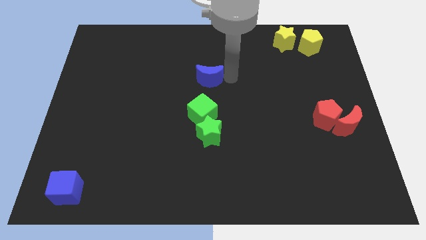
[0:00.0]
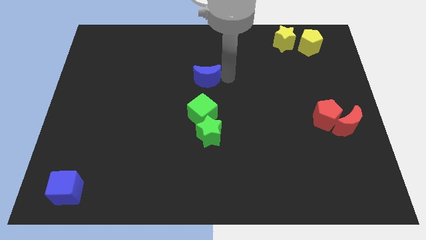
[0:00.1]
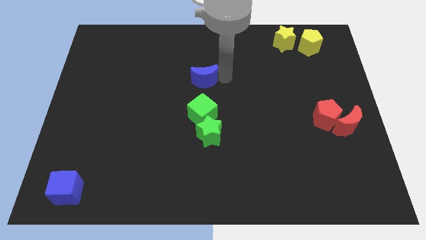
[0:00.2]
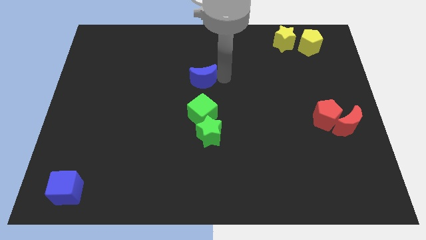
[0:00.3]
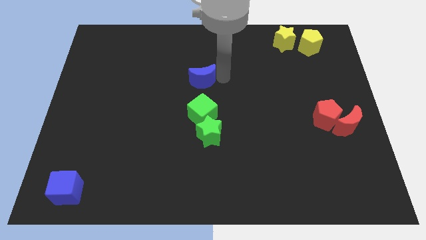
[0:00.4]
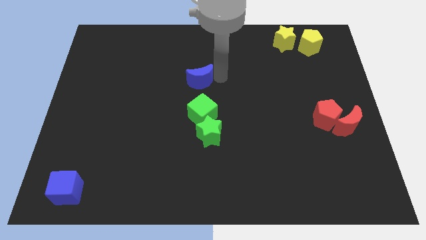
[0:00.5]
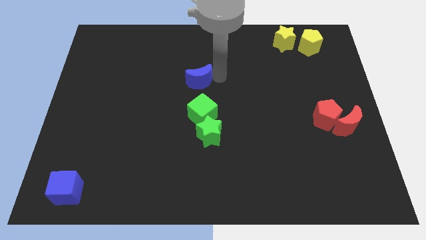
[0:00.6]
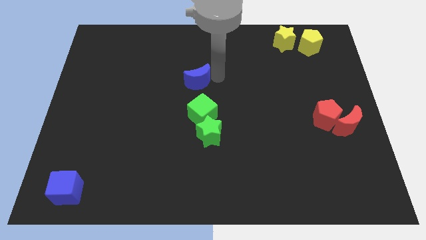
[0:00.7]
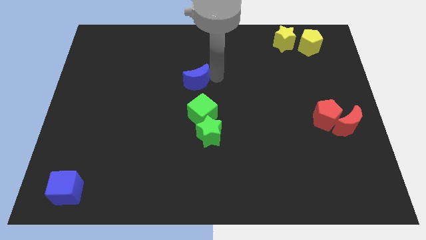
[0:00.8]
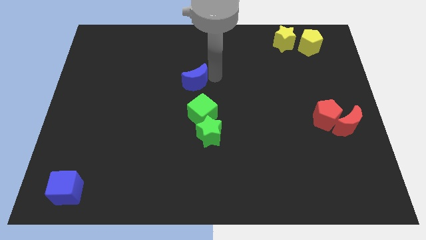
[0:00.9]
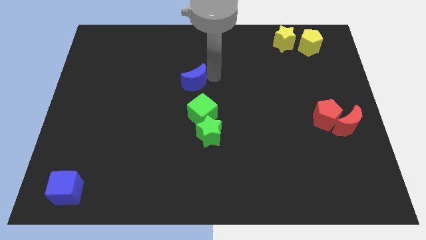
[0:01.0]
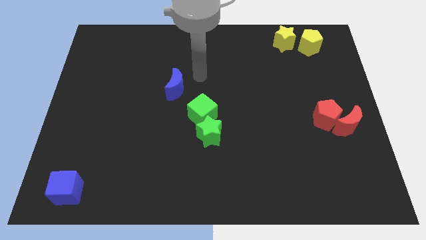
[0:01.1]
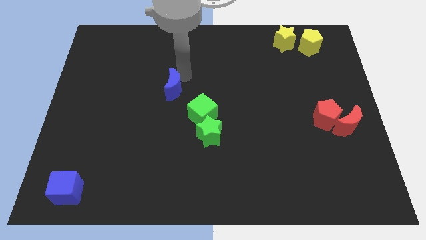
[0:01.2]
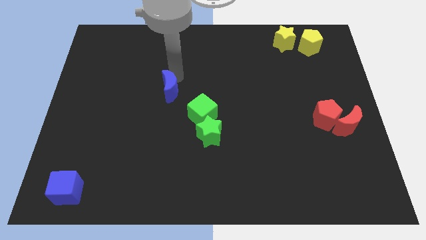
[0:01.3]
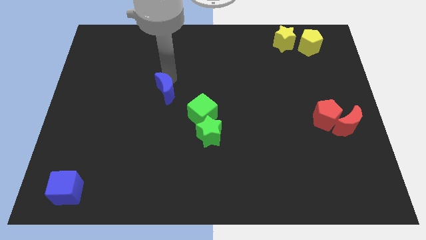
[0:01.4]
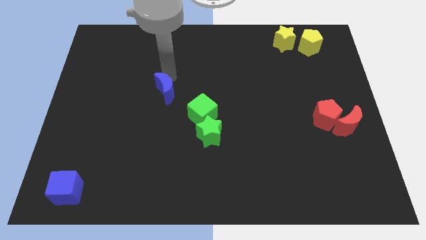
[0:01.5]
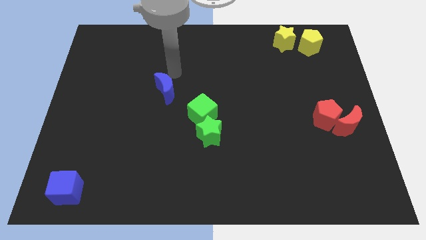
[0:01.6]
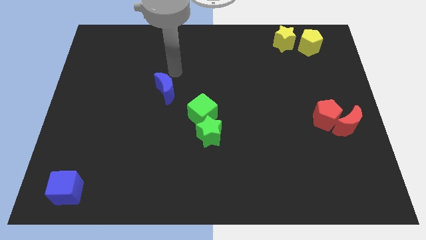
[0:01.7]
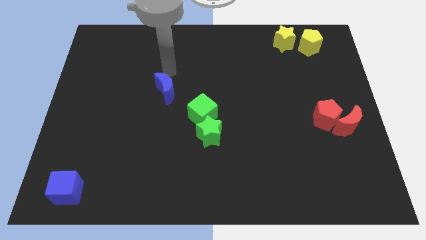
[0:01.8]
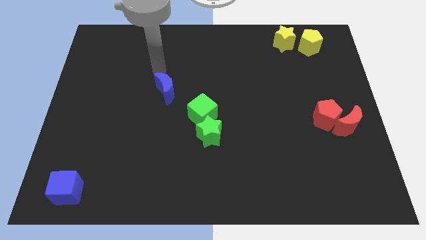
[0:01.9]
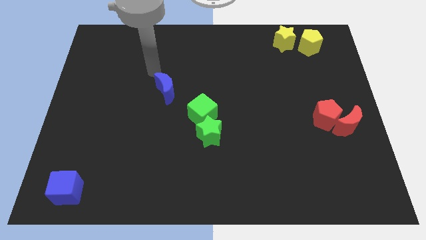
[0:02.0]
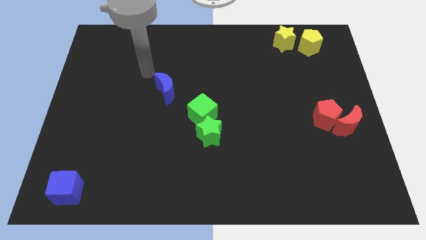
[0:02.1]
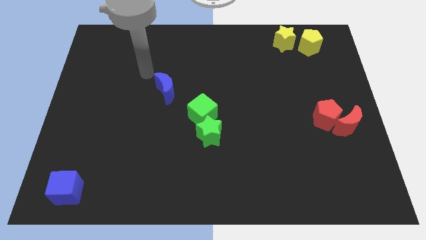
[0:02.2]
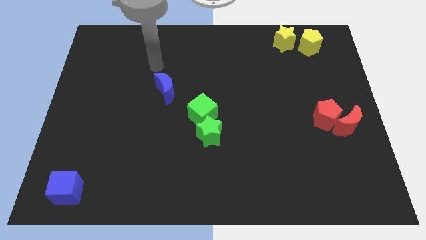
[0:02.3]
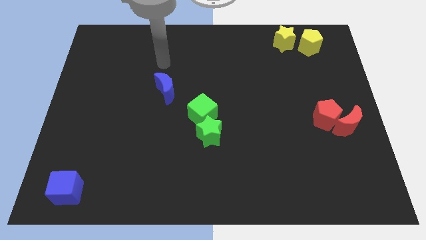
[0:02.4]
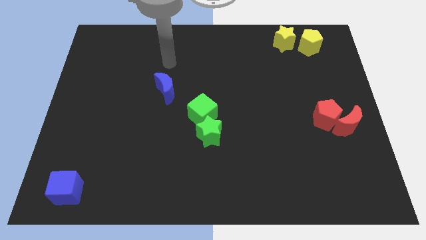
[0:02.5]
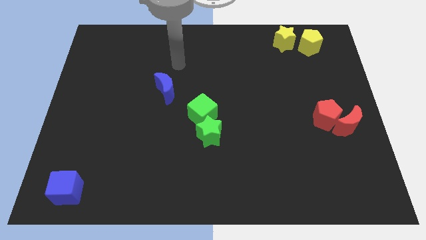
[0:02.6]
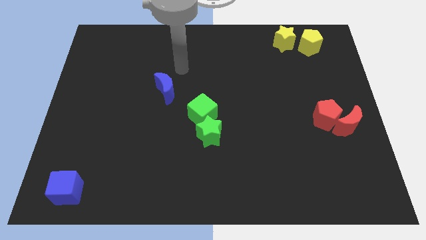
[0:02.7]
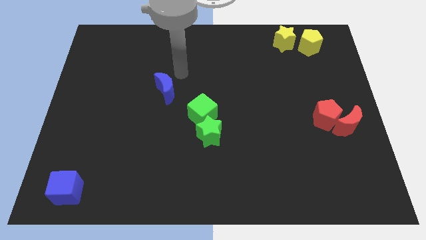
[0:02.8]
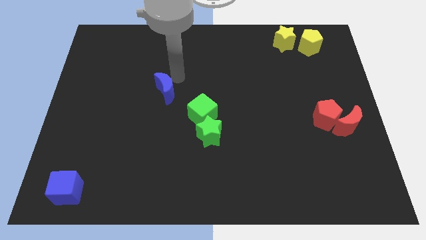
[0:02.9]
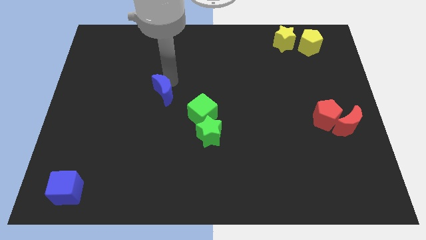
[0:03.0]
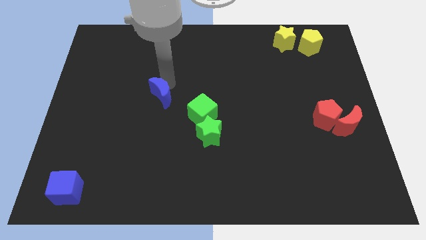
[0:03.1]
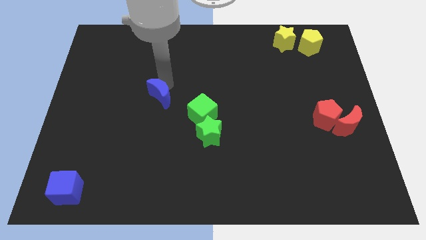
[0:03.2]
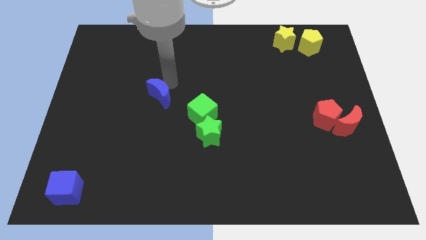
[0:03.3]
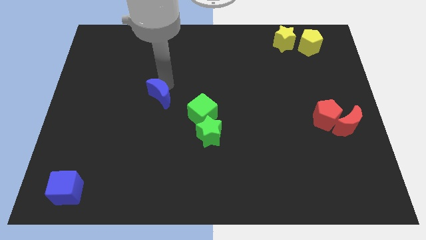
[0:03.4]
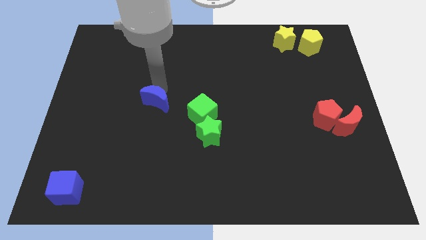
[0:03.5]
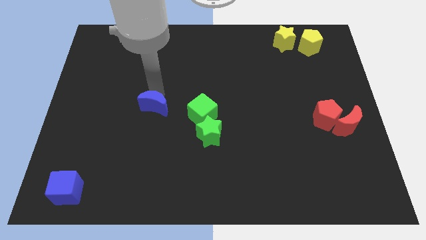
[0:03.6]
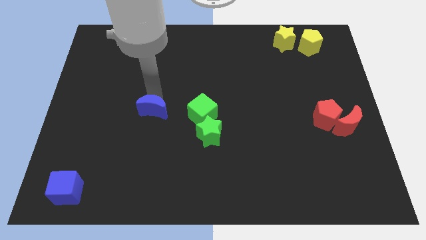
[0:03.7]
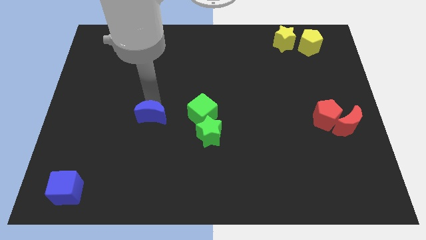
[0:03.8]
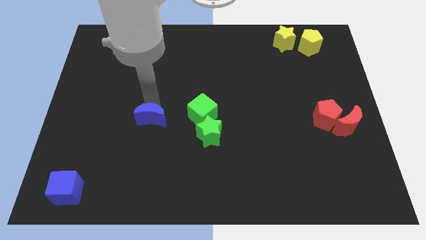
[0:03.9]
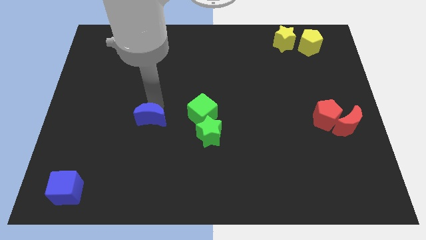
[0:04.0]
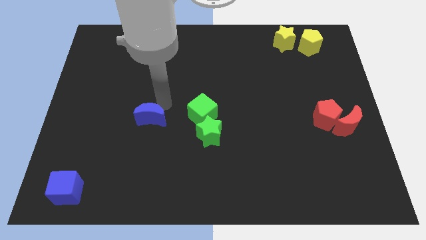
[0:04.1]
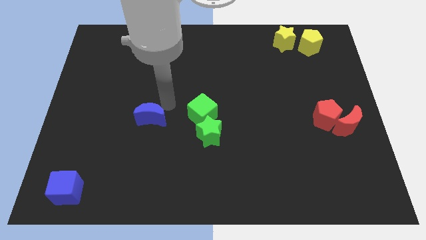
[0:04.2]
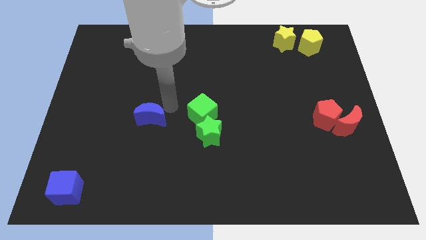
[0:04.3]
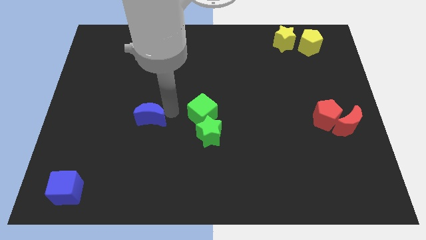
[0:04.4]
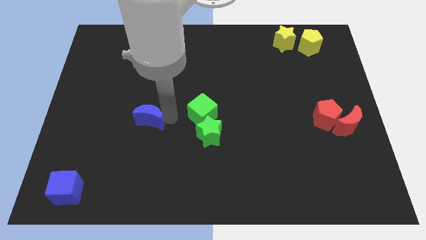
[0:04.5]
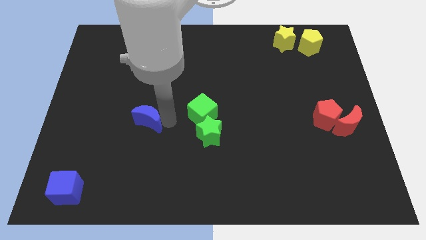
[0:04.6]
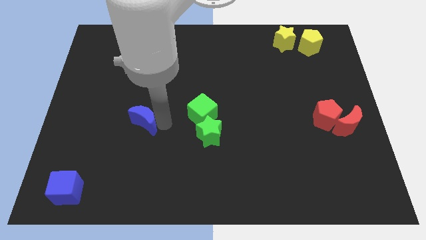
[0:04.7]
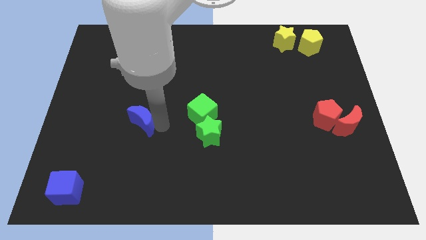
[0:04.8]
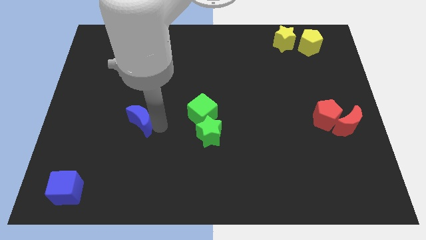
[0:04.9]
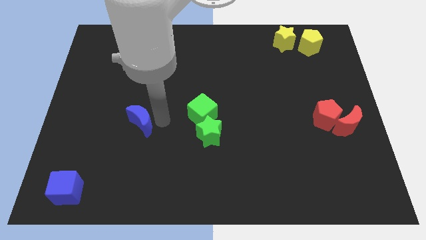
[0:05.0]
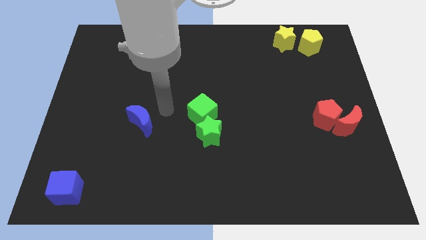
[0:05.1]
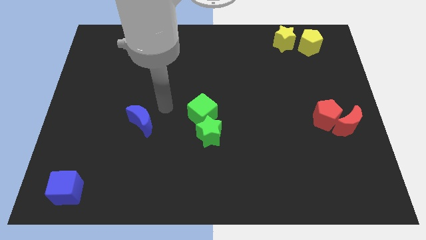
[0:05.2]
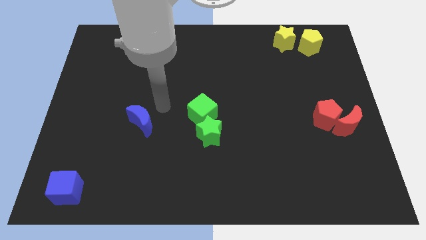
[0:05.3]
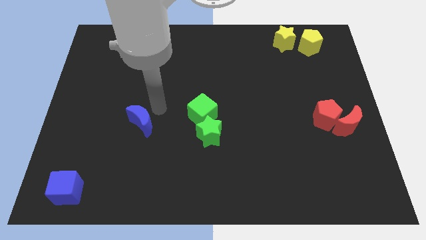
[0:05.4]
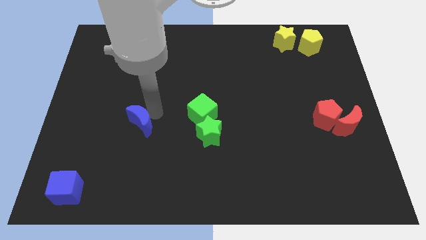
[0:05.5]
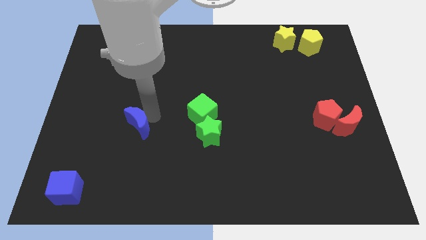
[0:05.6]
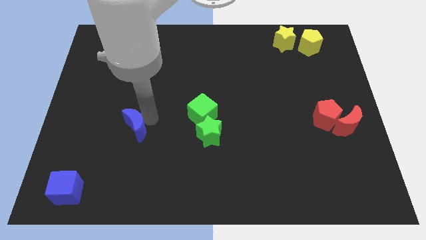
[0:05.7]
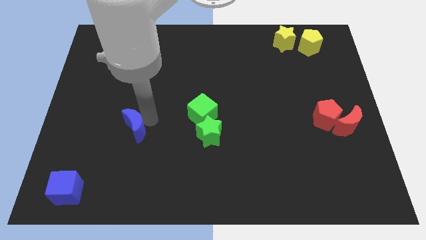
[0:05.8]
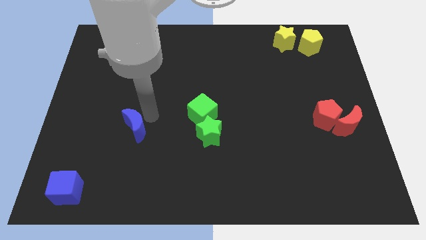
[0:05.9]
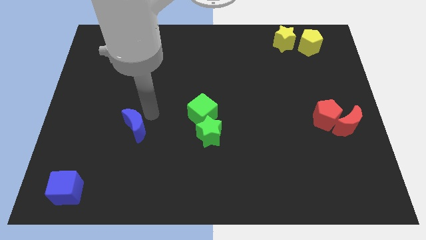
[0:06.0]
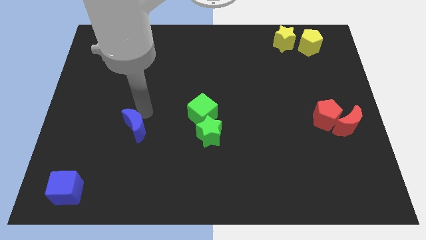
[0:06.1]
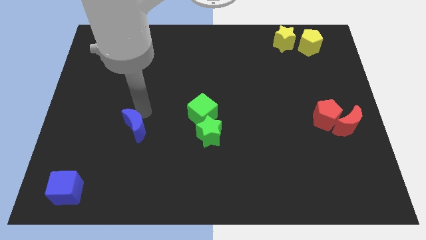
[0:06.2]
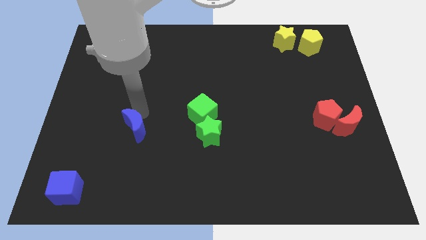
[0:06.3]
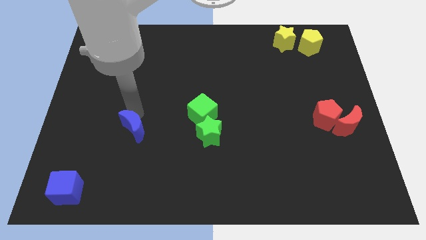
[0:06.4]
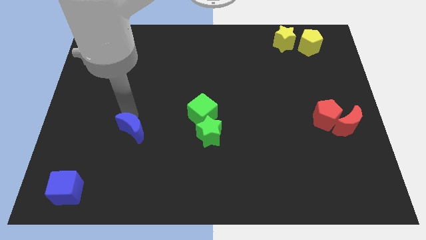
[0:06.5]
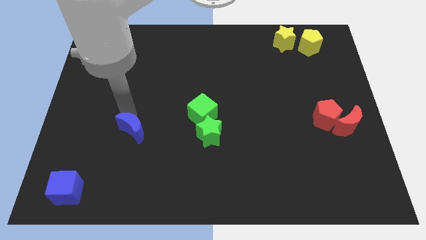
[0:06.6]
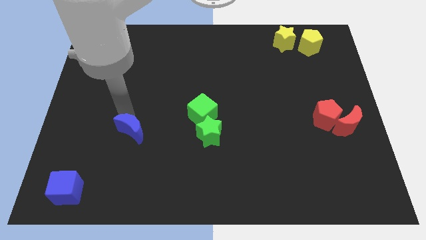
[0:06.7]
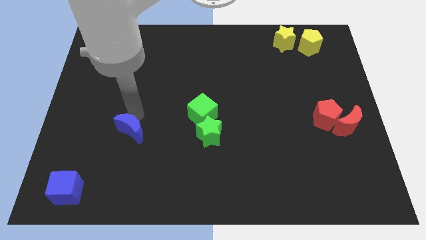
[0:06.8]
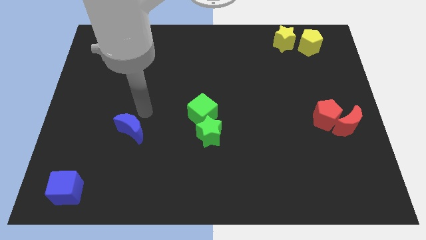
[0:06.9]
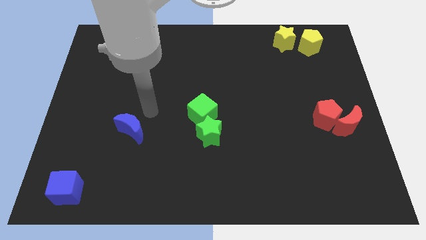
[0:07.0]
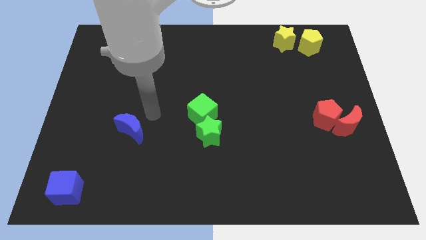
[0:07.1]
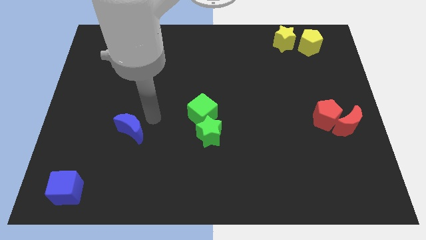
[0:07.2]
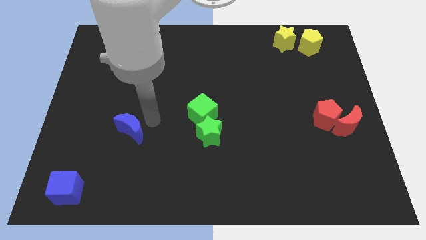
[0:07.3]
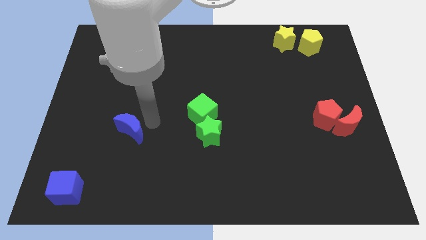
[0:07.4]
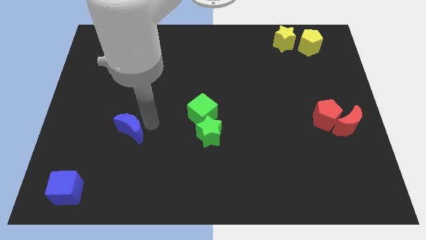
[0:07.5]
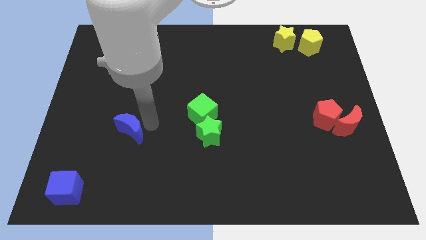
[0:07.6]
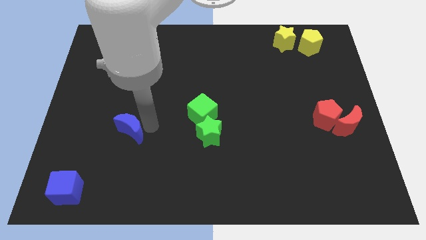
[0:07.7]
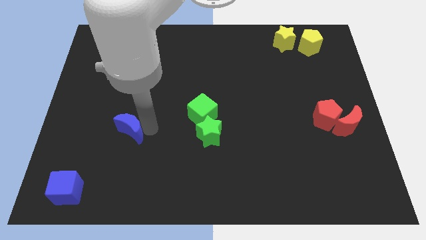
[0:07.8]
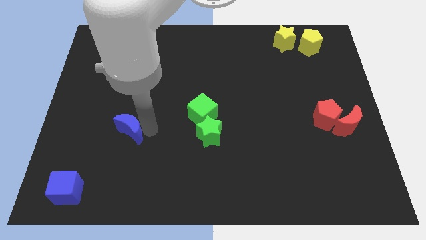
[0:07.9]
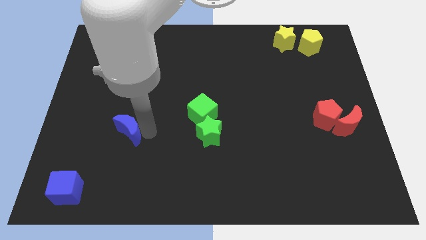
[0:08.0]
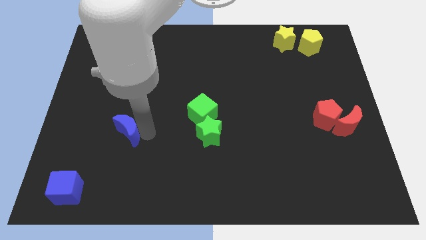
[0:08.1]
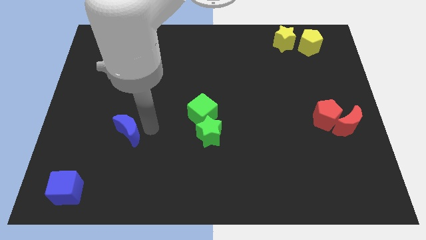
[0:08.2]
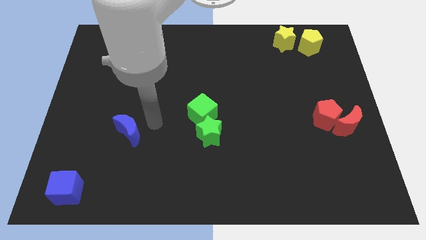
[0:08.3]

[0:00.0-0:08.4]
place blue moon parallel to green cube

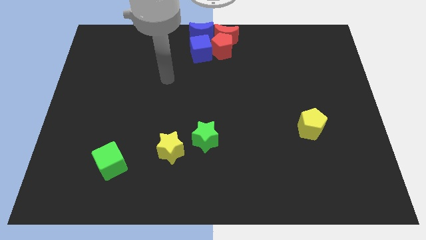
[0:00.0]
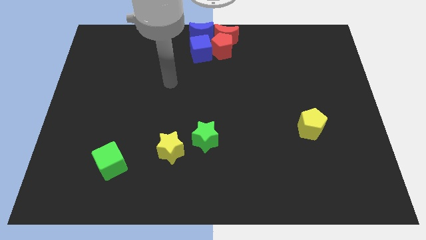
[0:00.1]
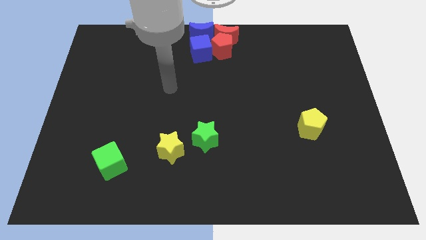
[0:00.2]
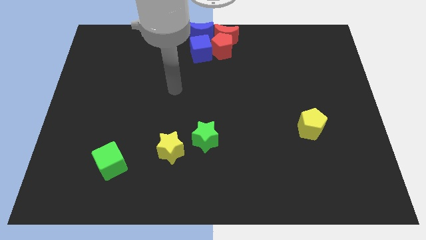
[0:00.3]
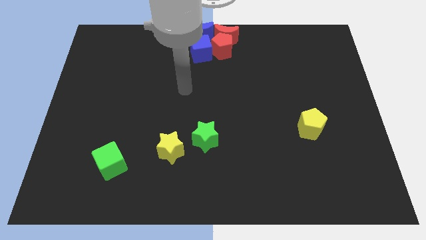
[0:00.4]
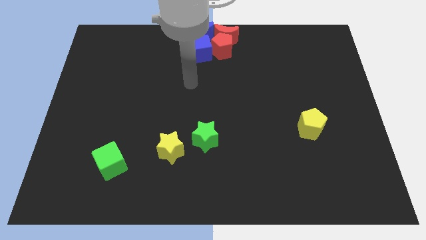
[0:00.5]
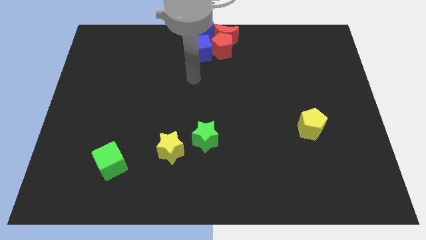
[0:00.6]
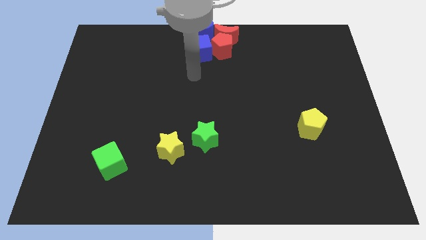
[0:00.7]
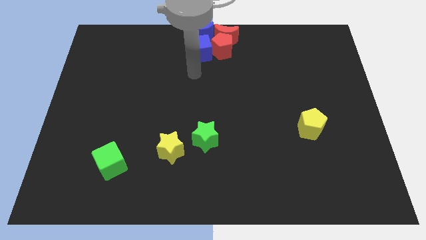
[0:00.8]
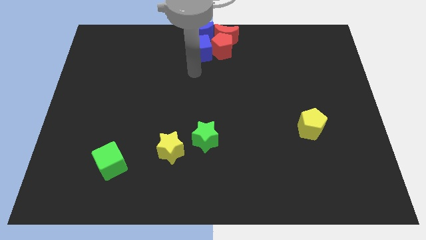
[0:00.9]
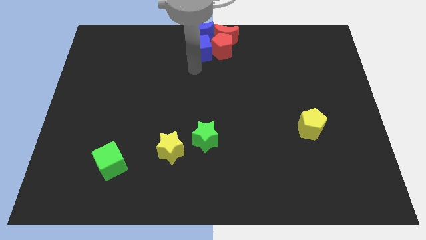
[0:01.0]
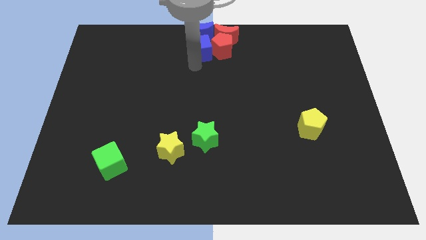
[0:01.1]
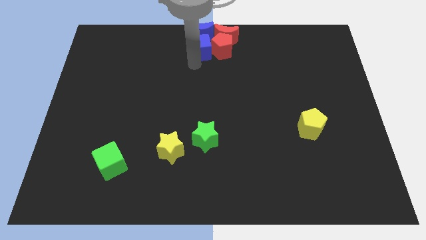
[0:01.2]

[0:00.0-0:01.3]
point your arm at the bottom of the blue cube
